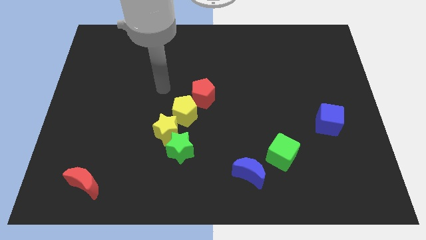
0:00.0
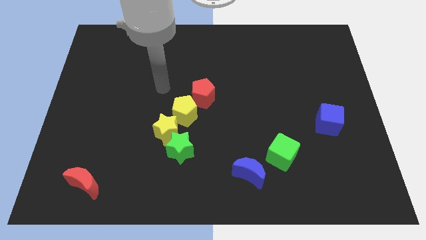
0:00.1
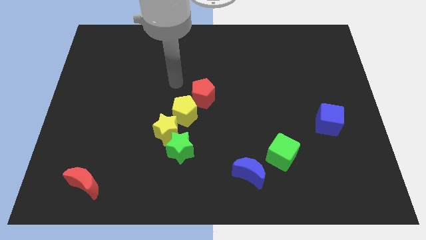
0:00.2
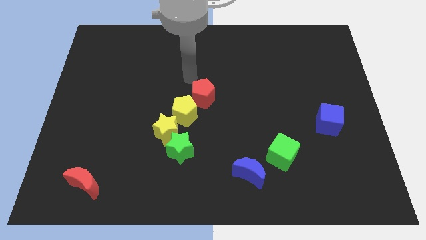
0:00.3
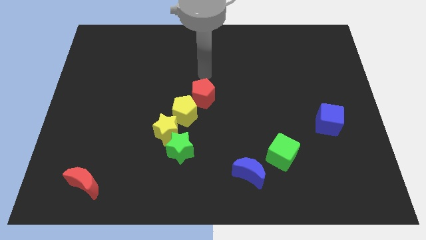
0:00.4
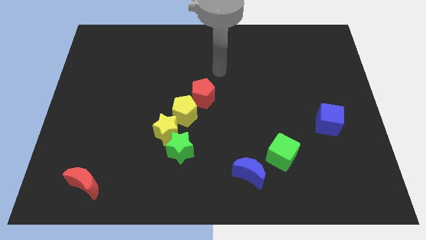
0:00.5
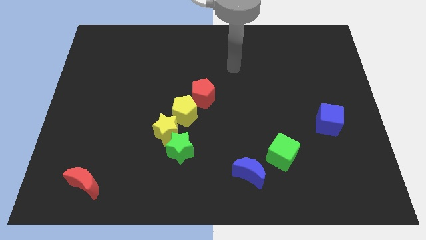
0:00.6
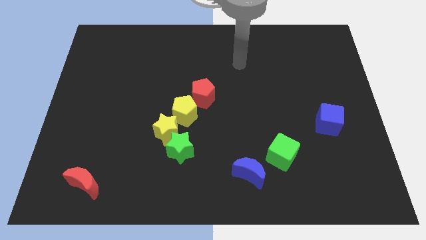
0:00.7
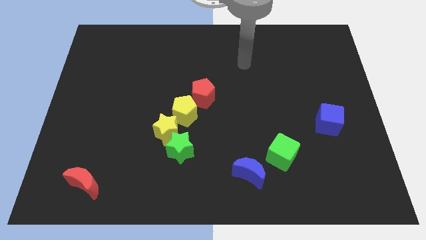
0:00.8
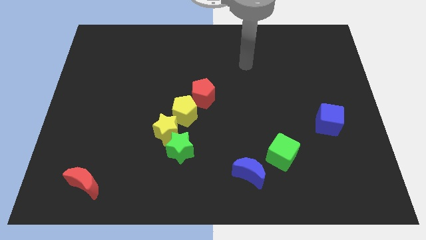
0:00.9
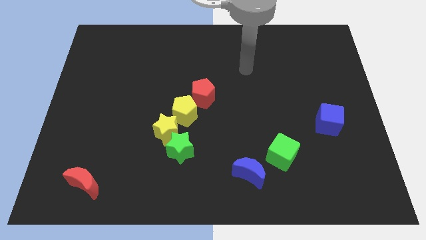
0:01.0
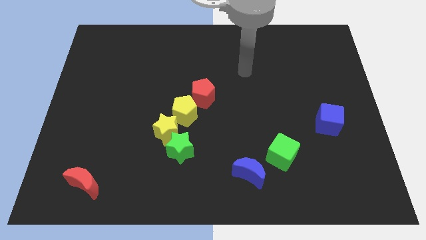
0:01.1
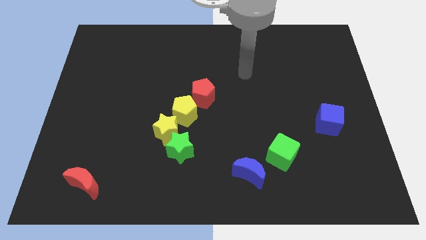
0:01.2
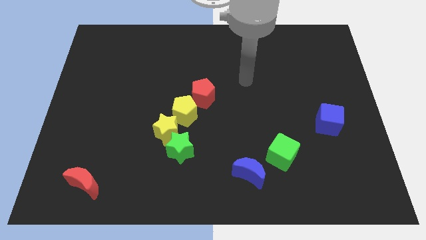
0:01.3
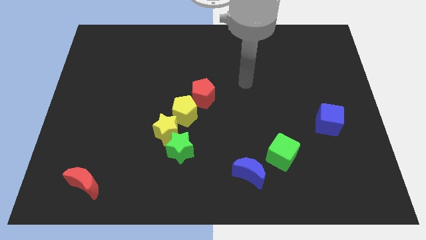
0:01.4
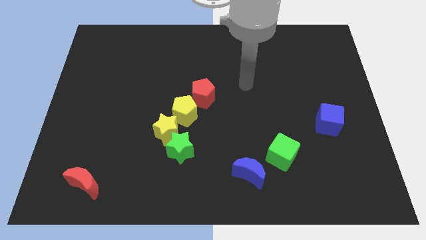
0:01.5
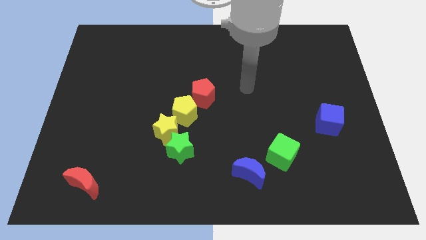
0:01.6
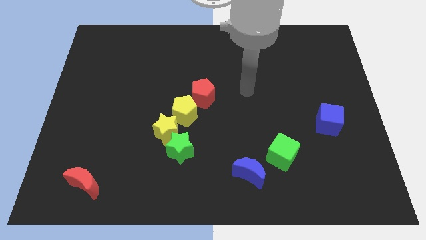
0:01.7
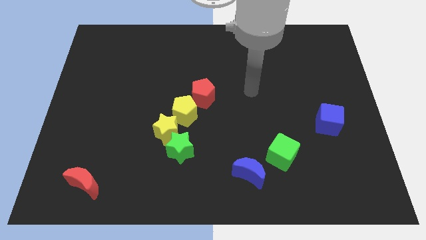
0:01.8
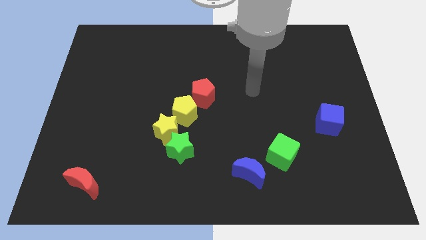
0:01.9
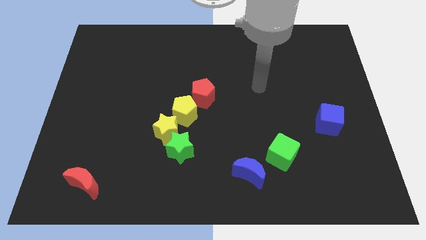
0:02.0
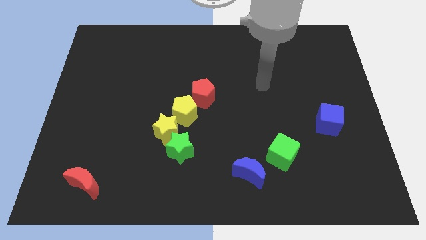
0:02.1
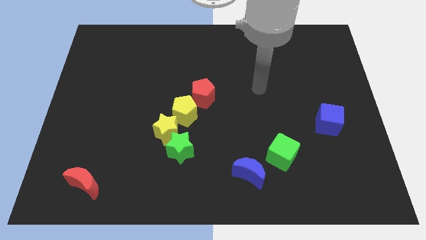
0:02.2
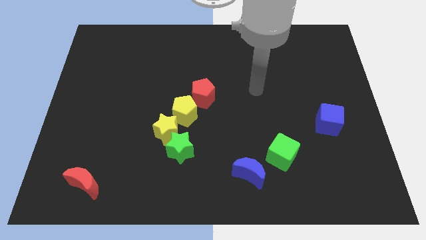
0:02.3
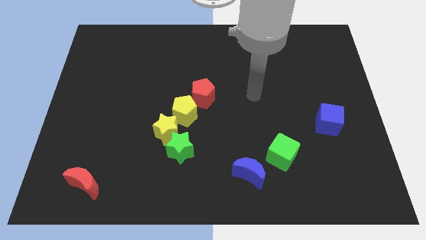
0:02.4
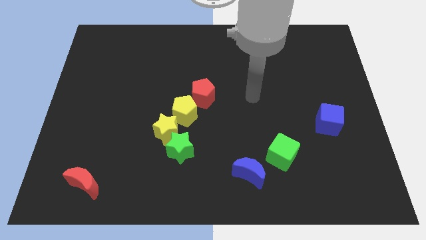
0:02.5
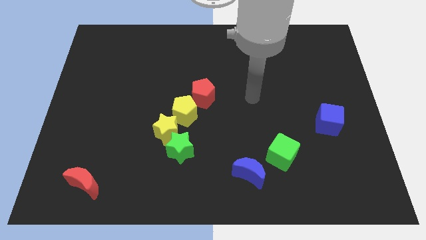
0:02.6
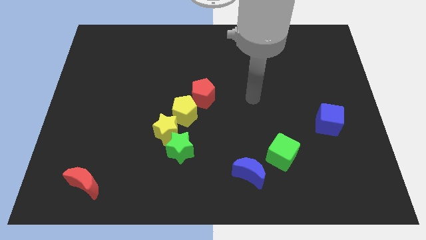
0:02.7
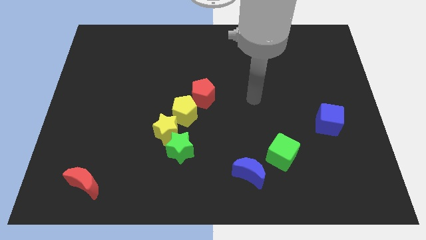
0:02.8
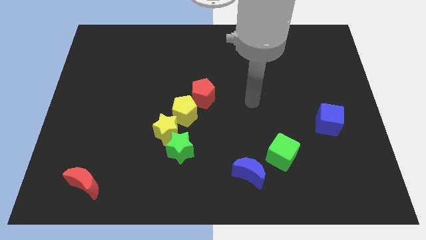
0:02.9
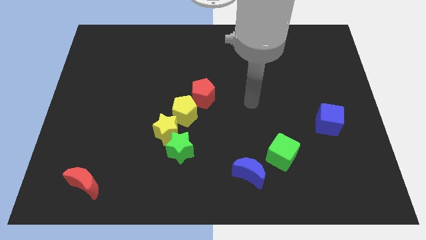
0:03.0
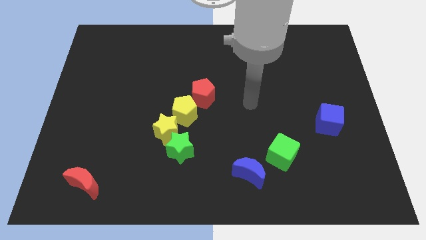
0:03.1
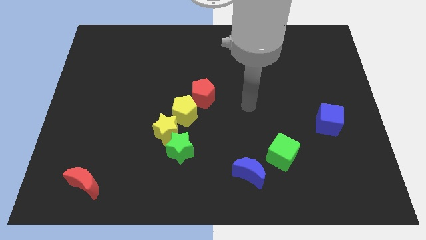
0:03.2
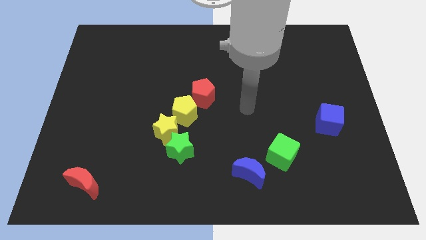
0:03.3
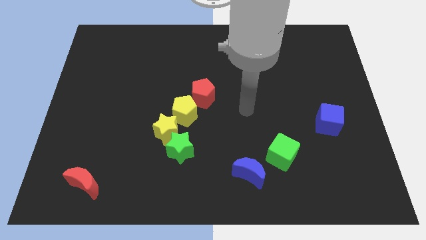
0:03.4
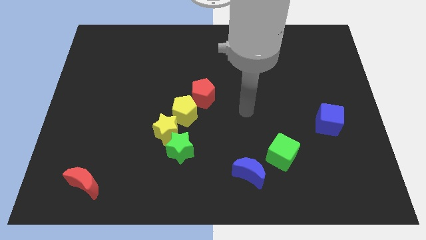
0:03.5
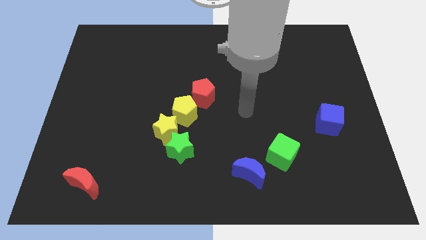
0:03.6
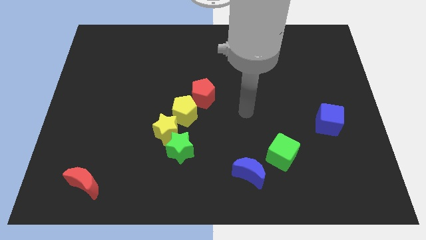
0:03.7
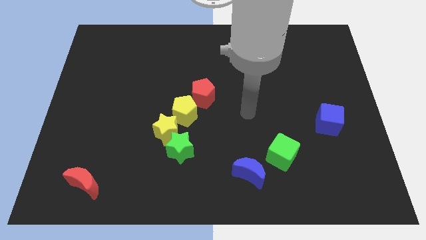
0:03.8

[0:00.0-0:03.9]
place arm in between red pentagon and green block

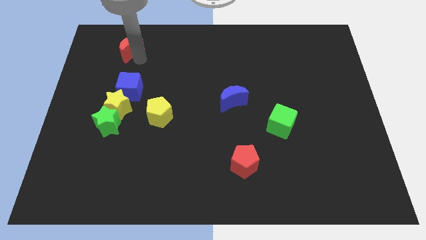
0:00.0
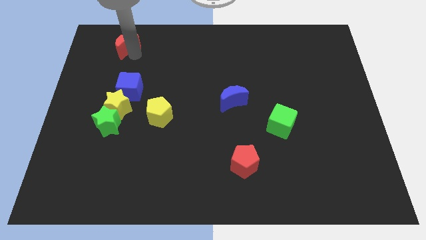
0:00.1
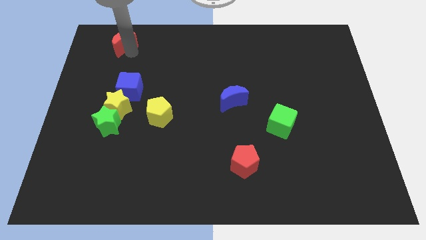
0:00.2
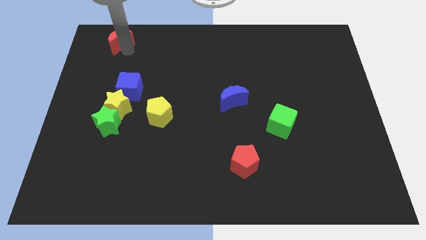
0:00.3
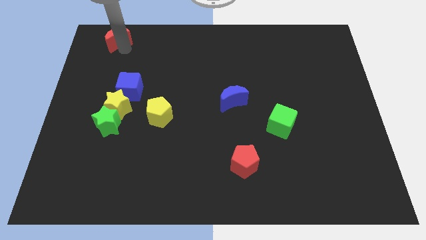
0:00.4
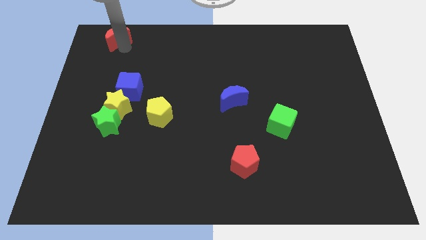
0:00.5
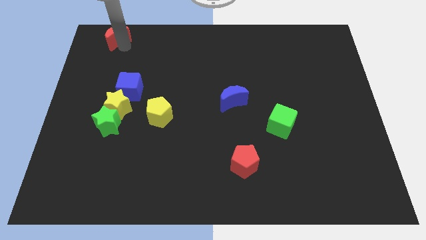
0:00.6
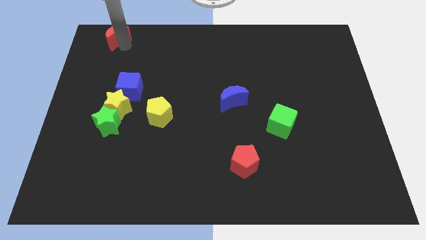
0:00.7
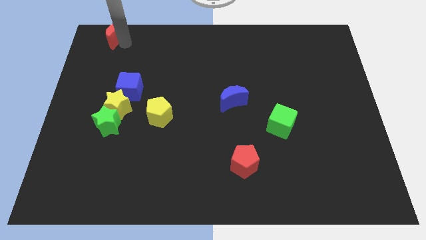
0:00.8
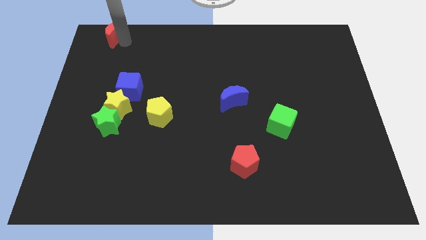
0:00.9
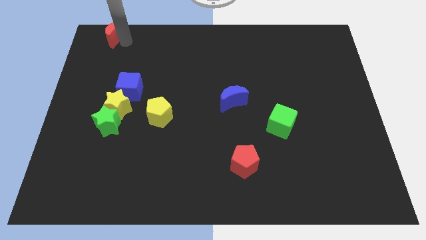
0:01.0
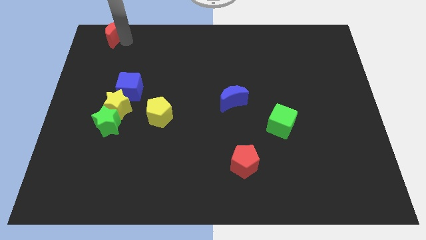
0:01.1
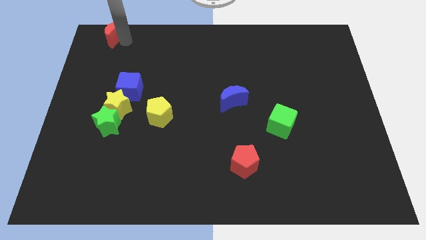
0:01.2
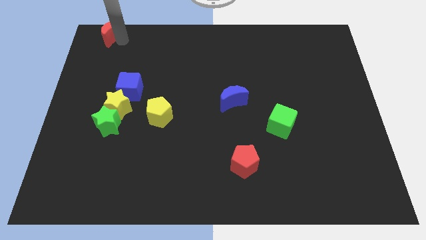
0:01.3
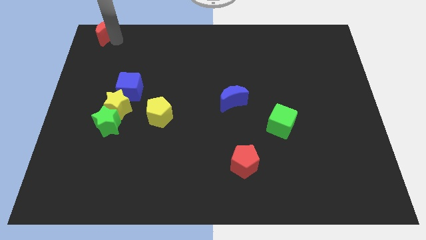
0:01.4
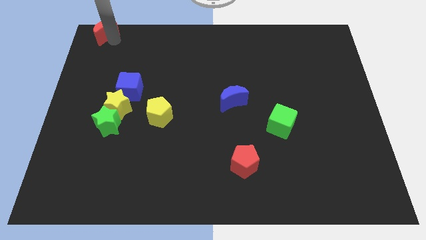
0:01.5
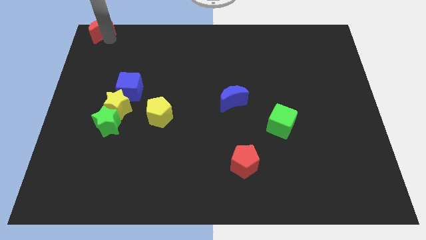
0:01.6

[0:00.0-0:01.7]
push the red crescent to the top left of the blue cube

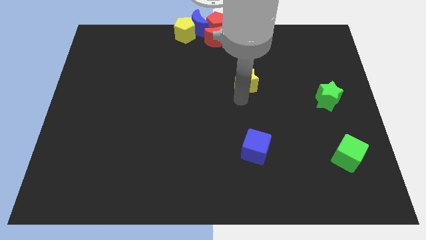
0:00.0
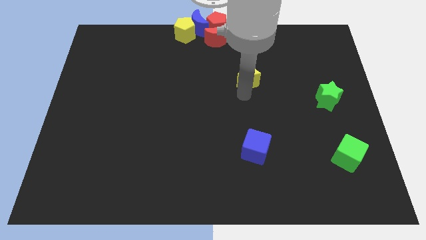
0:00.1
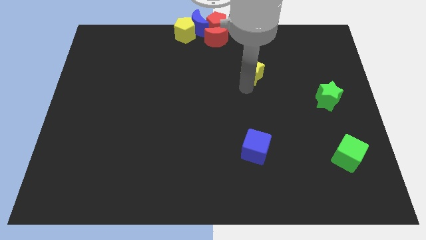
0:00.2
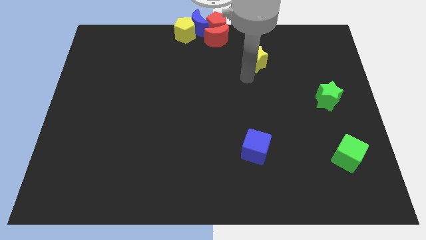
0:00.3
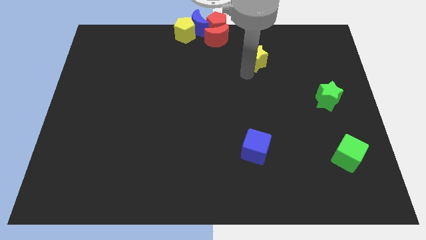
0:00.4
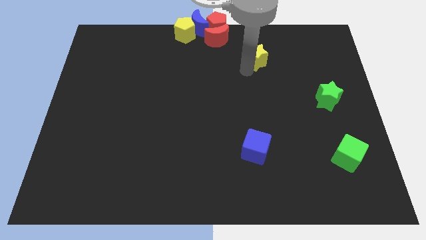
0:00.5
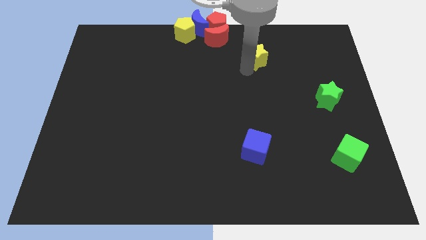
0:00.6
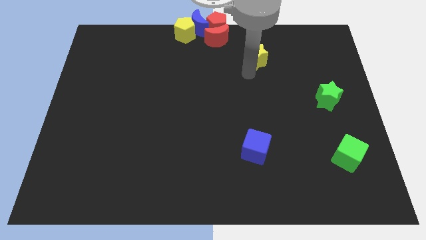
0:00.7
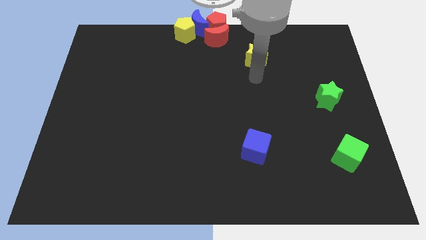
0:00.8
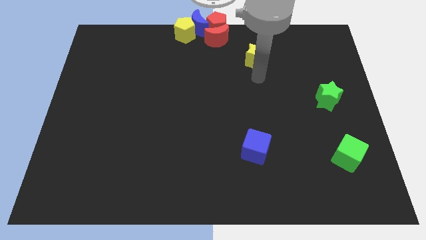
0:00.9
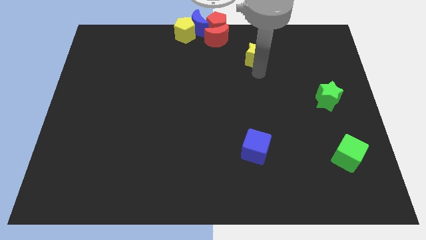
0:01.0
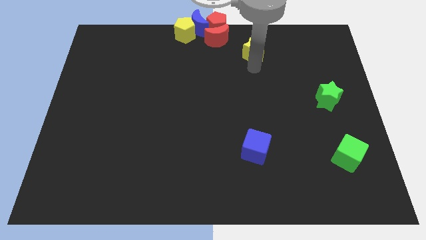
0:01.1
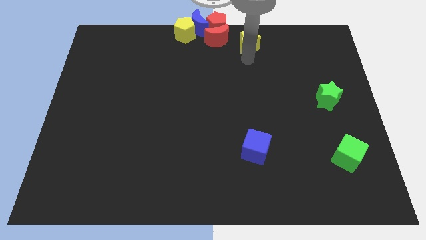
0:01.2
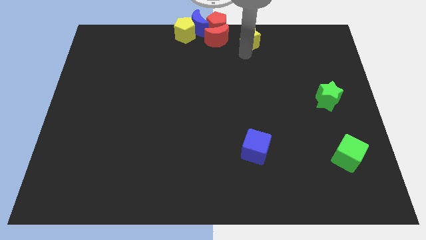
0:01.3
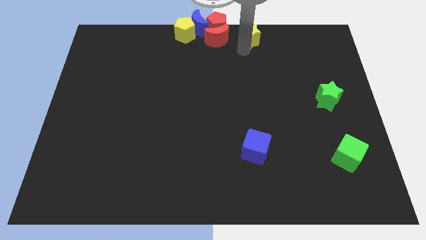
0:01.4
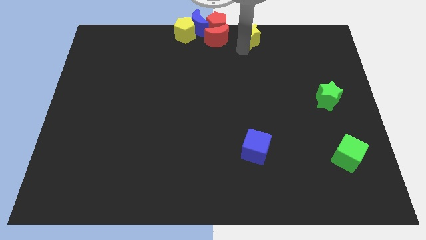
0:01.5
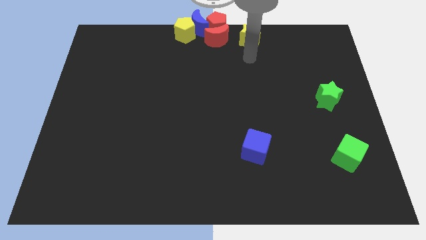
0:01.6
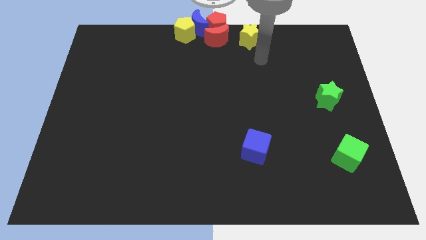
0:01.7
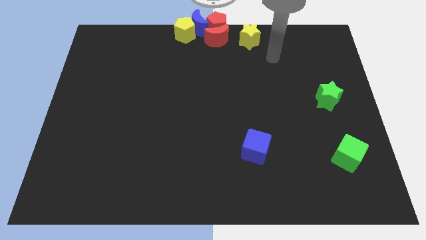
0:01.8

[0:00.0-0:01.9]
move the yellow star to the right side of the red moon

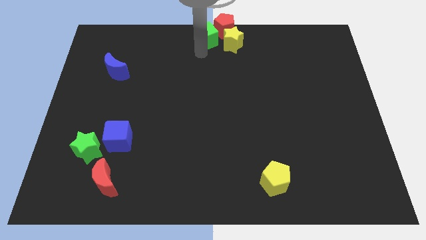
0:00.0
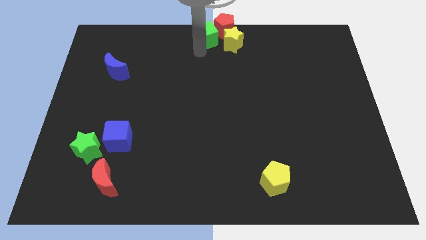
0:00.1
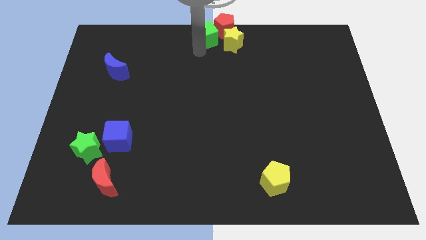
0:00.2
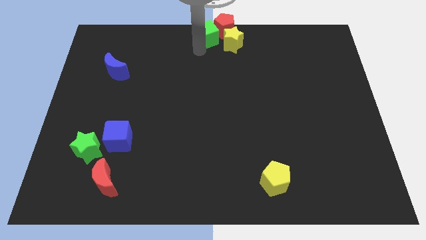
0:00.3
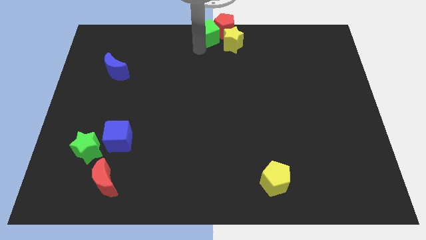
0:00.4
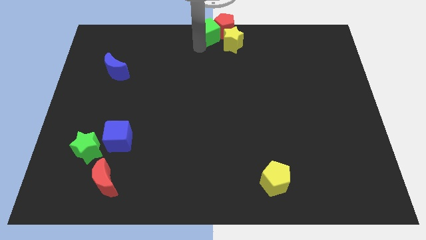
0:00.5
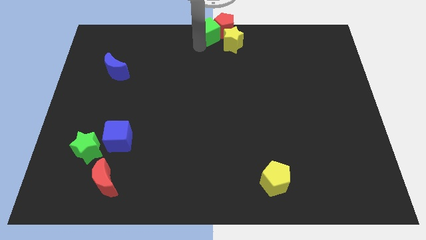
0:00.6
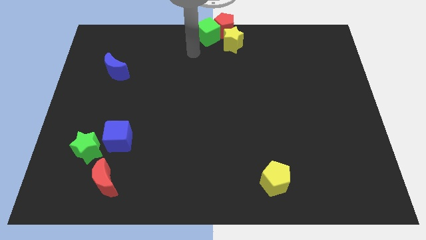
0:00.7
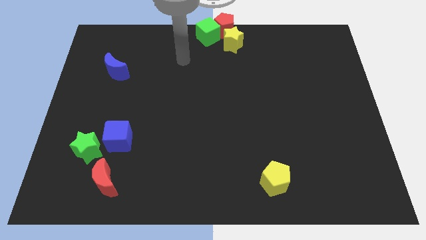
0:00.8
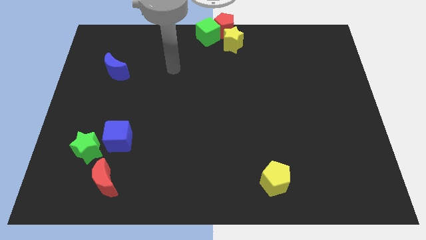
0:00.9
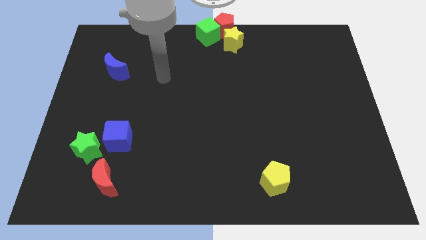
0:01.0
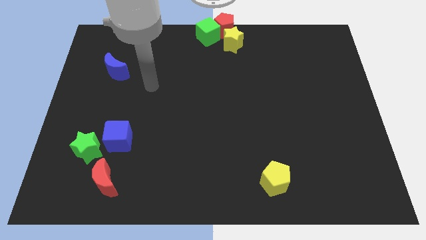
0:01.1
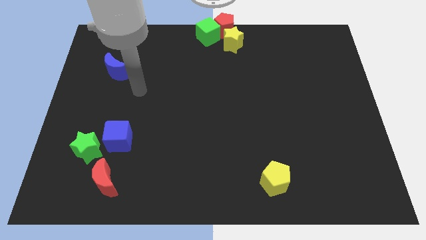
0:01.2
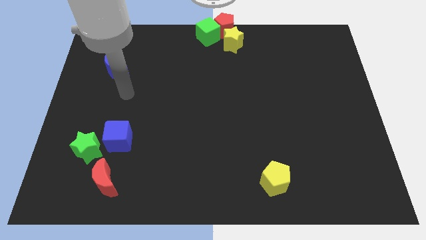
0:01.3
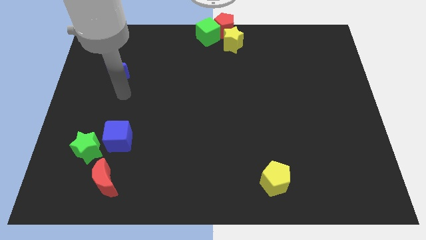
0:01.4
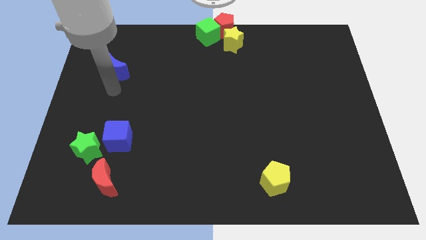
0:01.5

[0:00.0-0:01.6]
move the green cube to the left of the red pentagon
